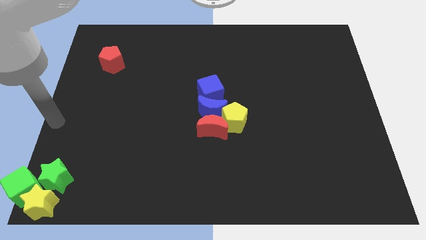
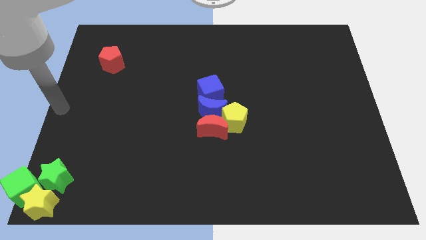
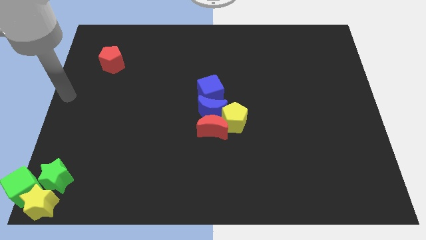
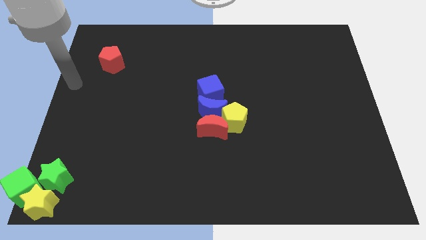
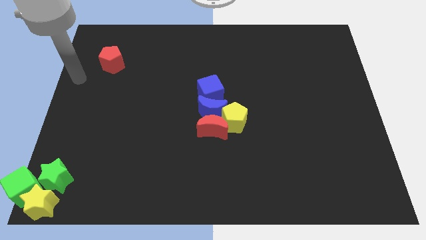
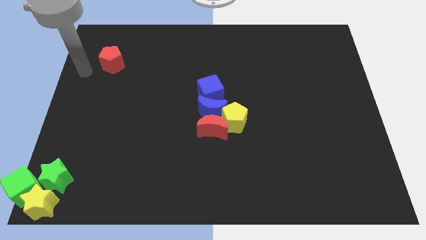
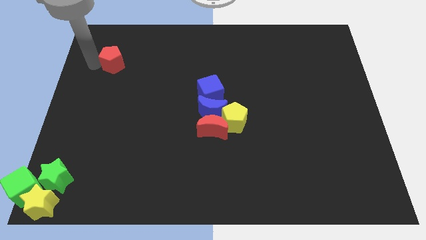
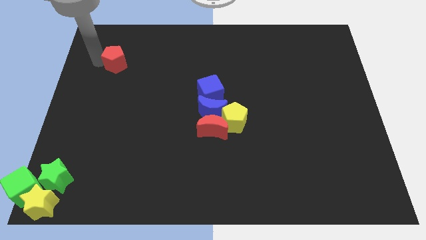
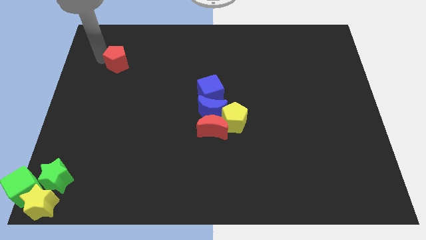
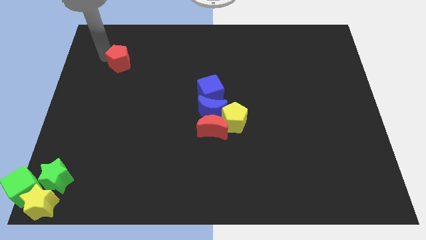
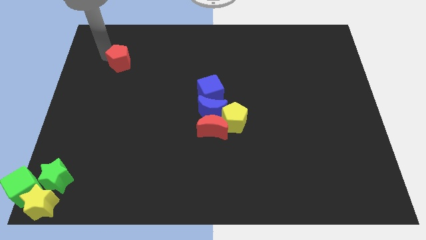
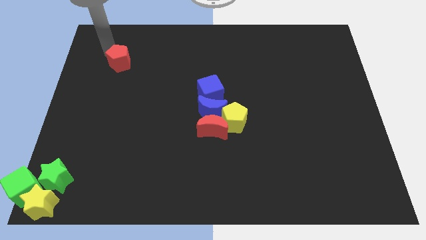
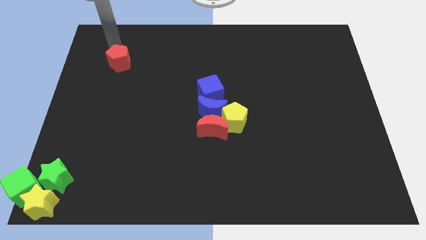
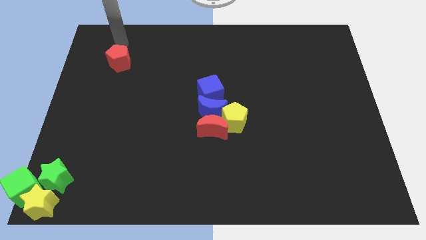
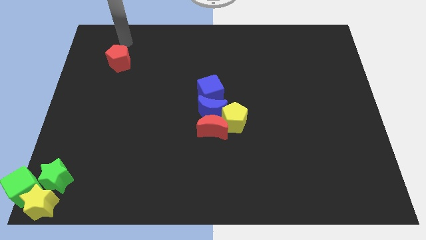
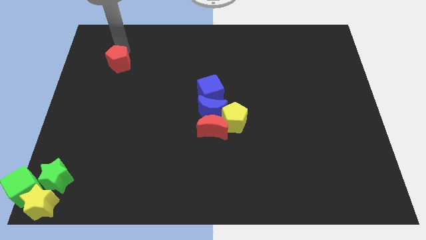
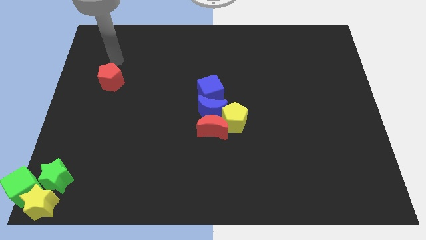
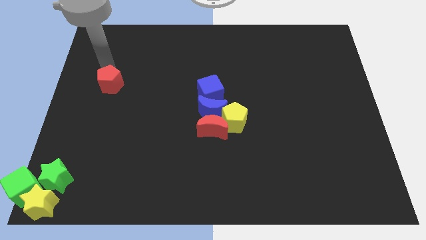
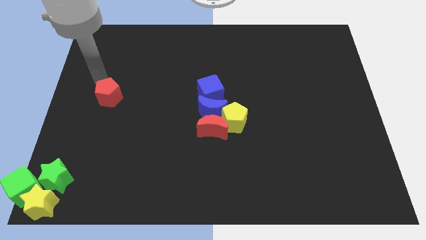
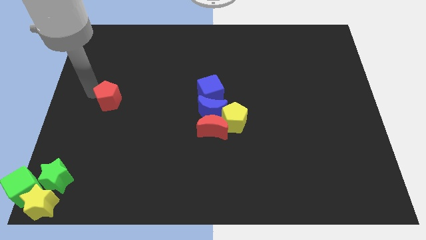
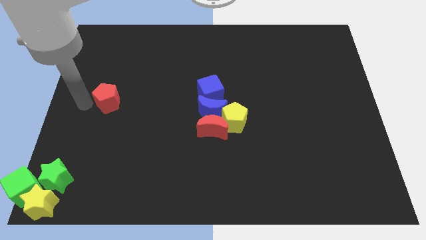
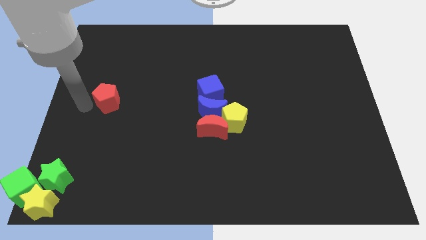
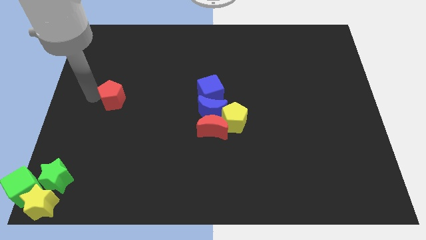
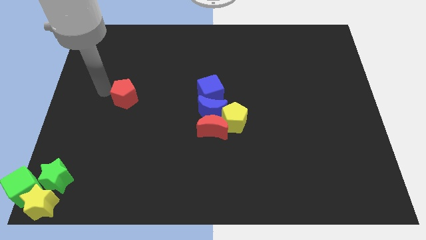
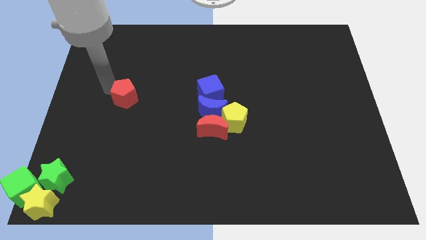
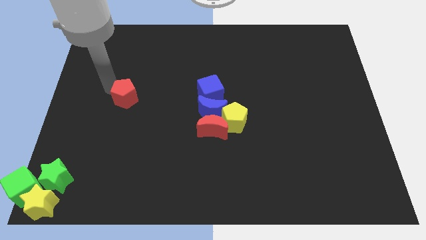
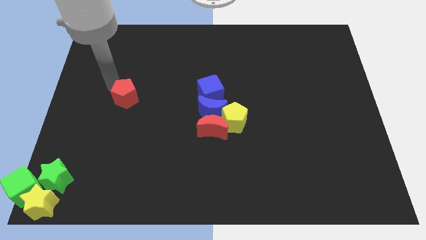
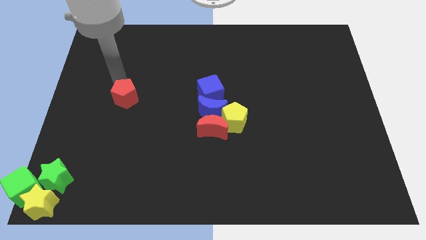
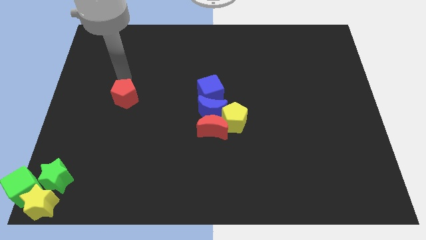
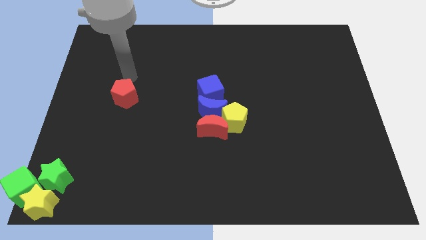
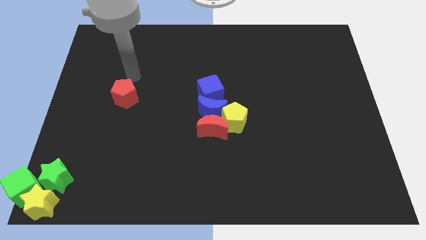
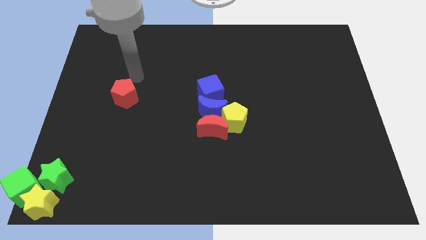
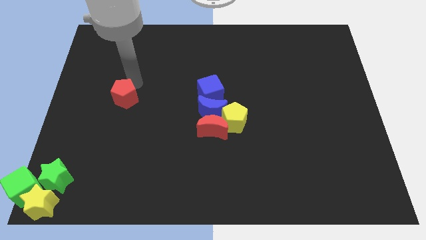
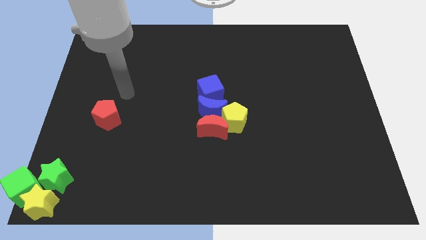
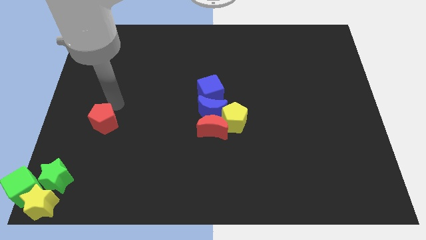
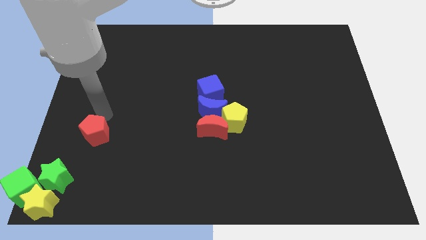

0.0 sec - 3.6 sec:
move the red pentagon diagonal above green star

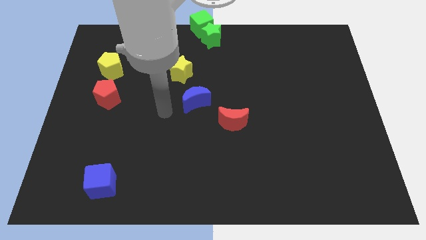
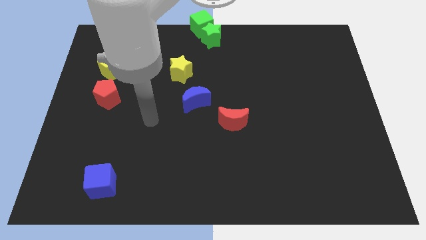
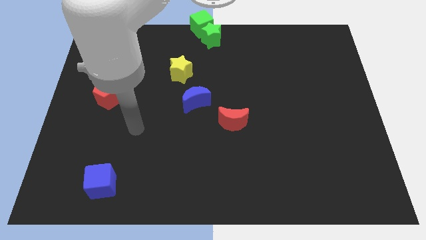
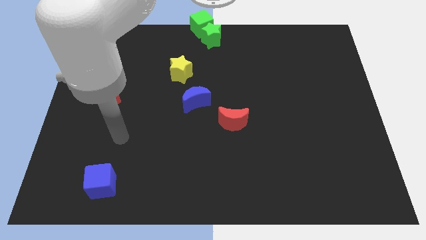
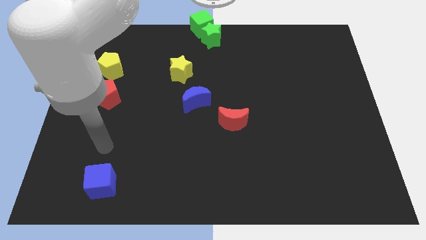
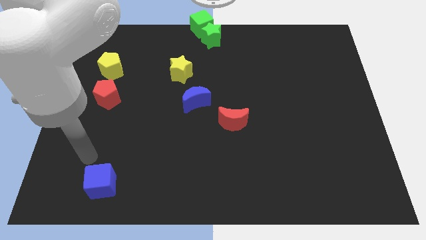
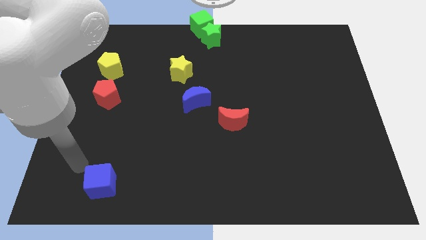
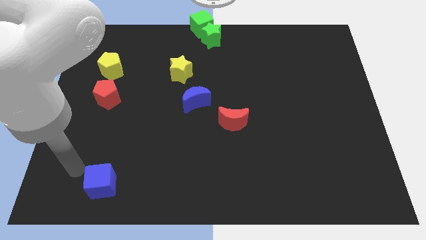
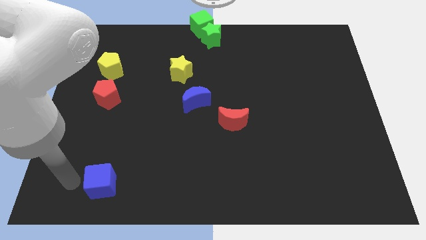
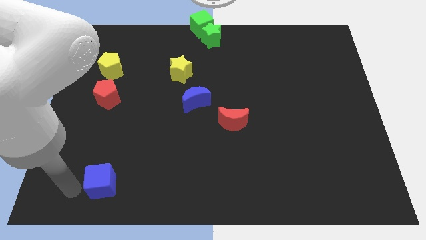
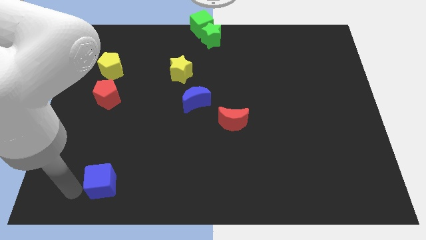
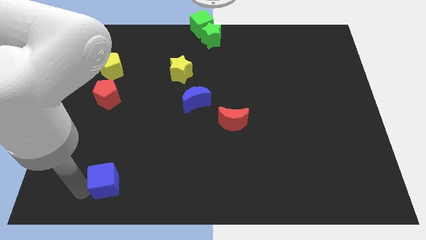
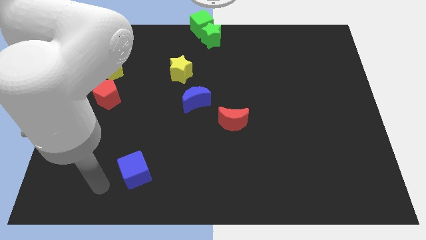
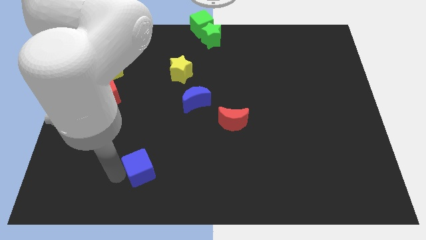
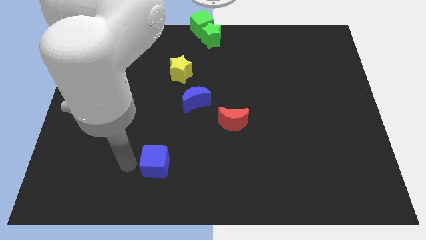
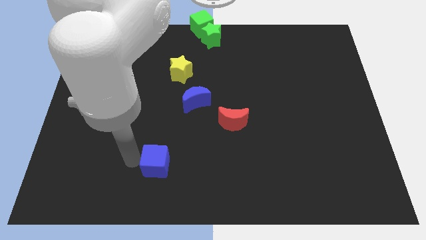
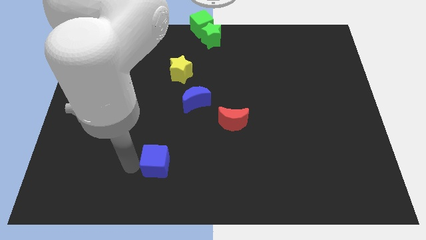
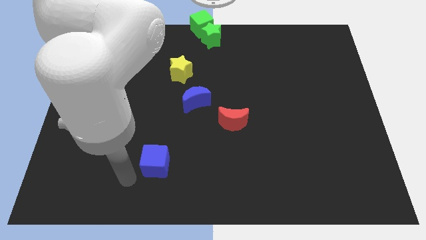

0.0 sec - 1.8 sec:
push the blue cube slightly to the right

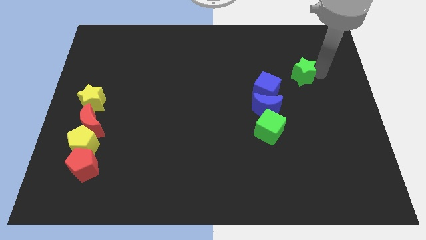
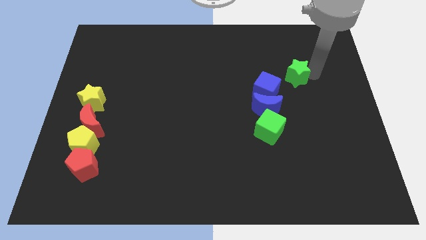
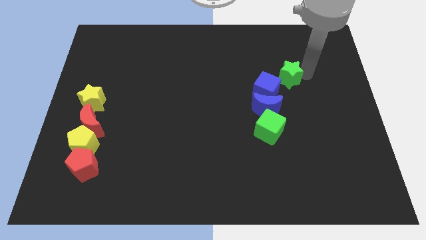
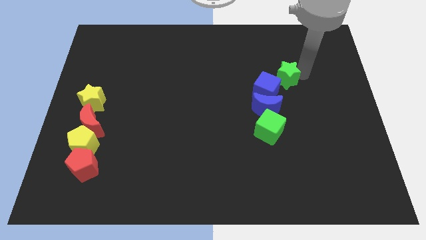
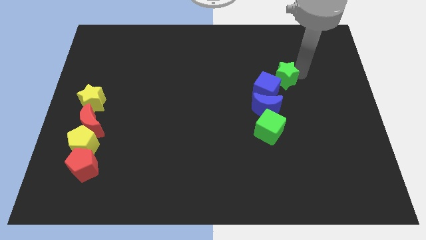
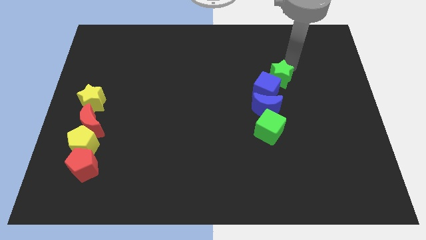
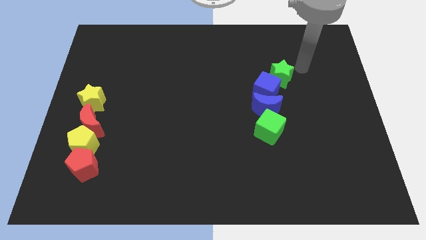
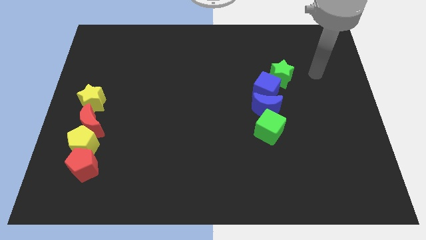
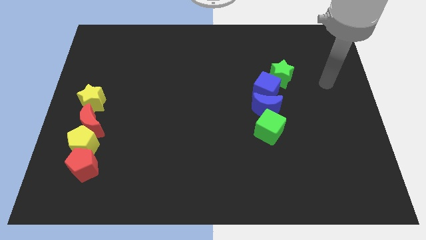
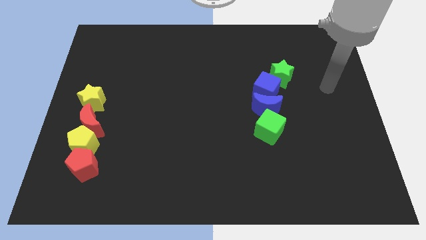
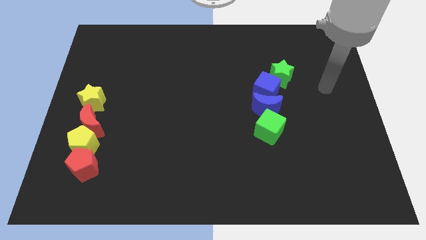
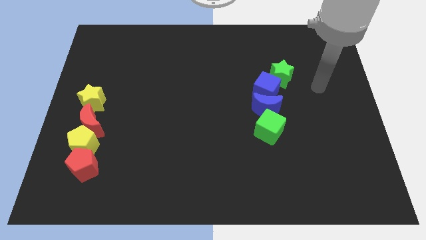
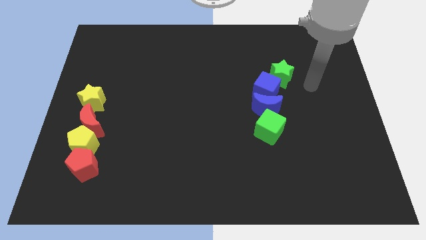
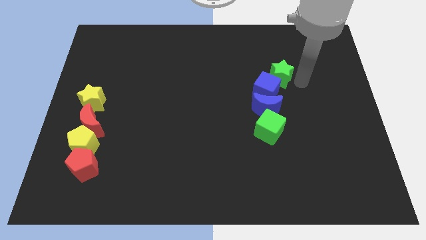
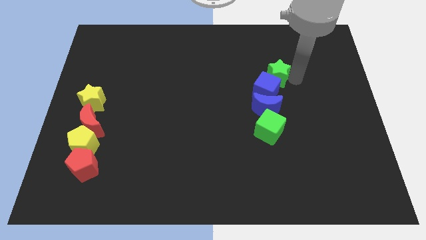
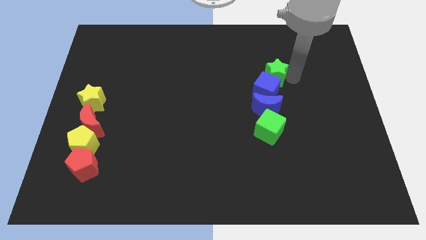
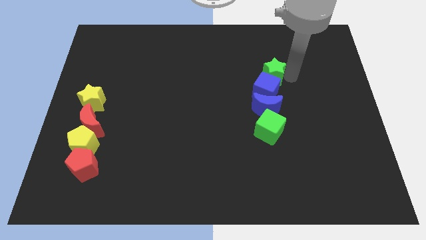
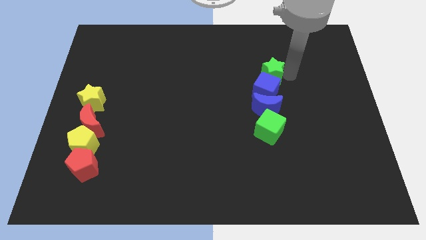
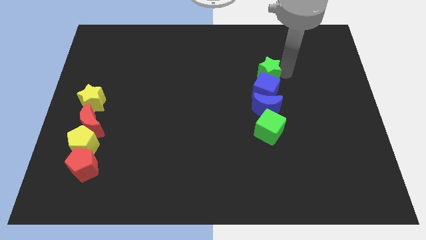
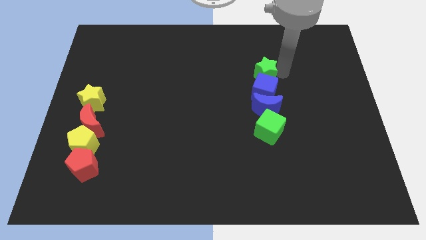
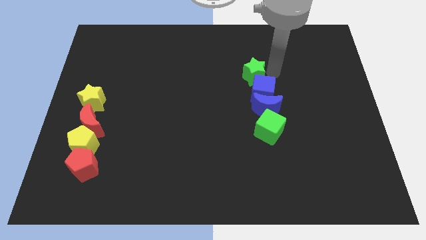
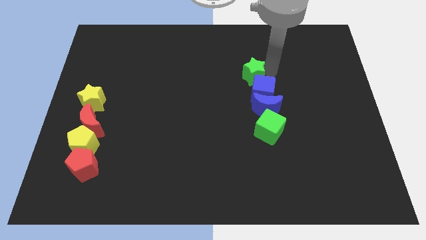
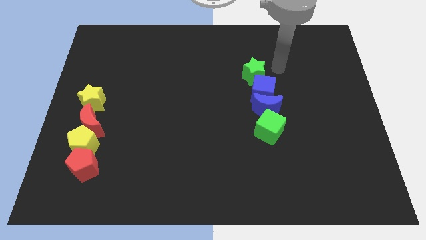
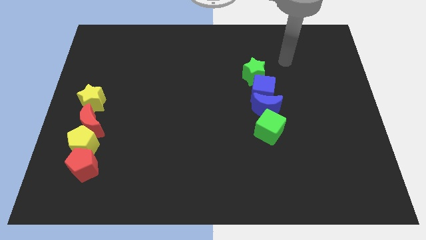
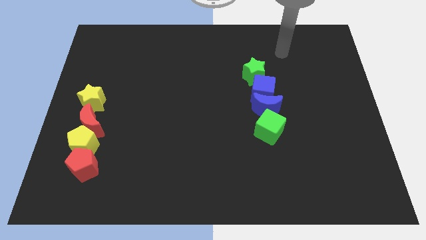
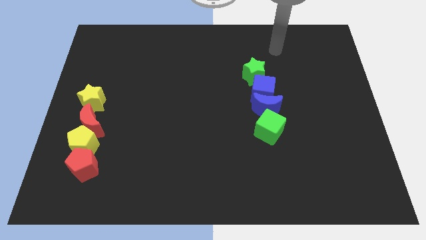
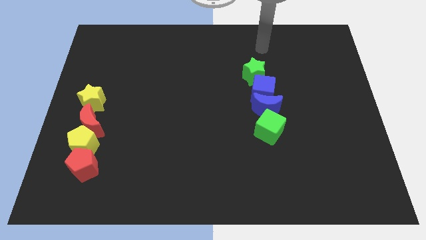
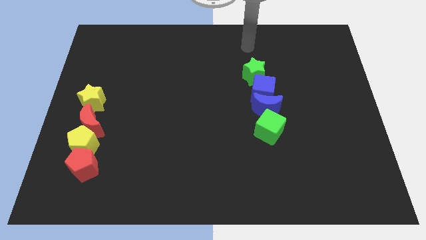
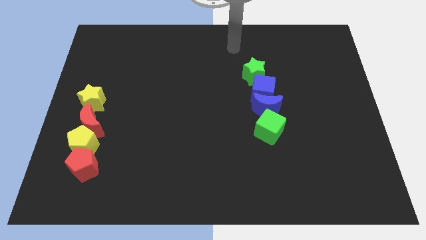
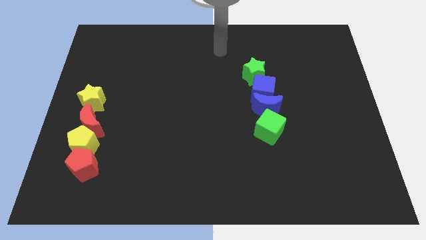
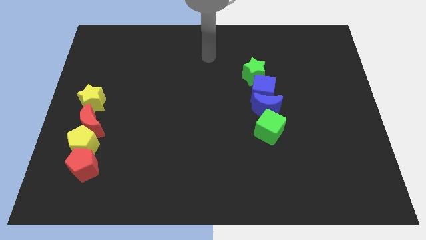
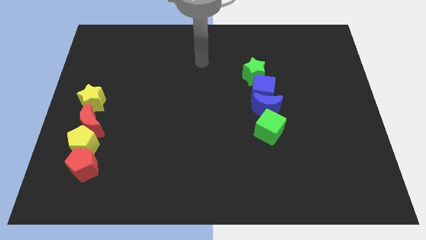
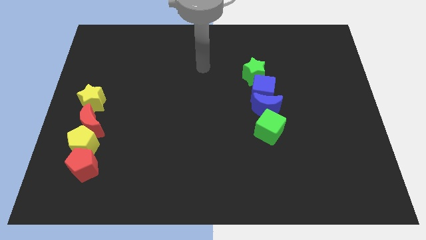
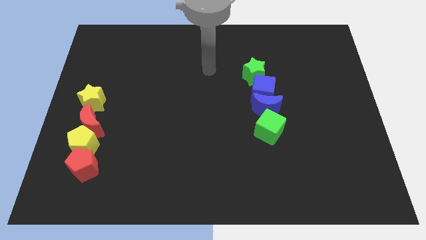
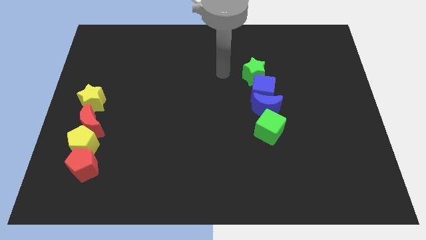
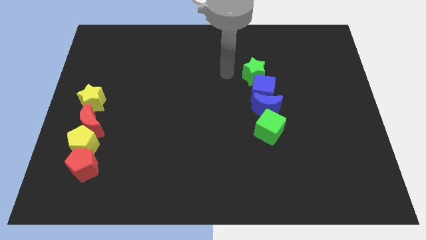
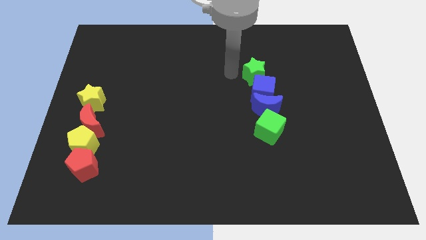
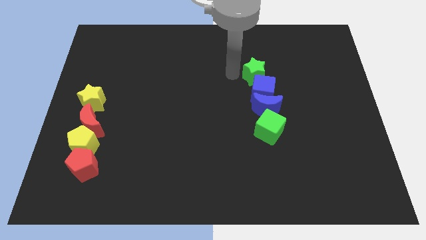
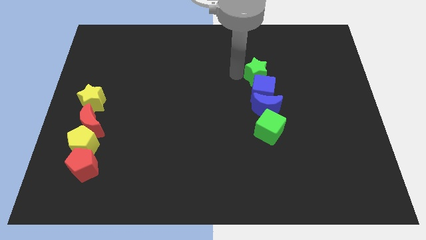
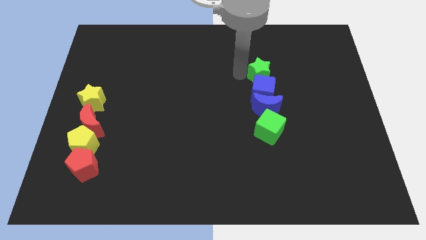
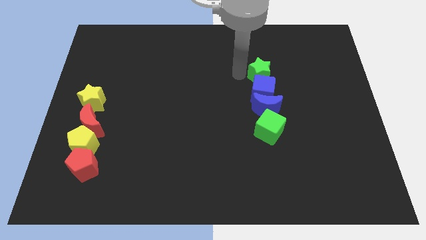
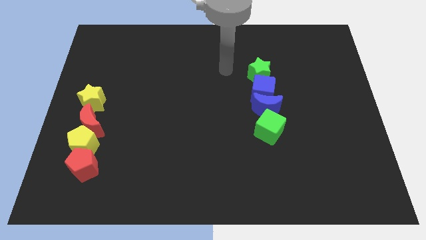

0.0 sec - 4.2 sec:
place green star above blue cube
